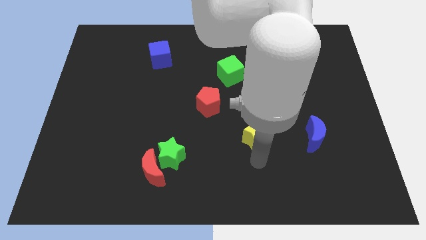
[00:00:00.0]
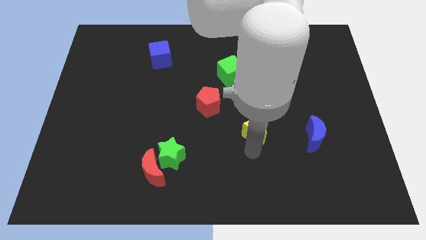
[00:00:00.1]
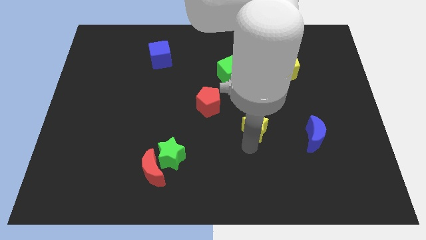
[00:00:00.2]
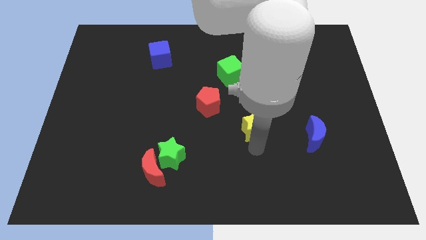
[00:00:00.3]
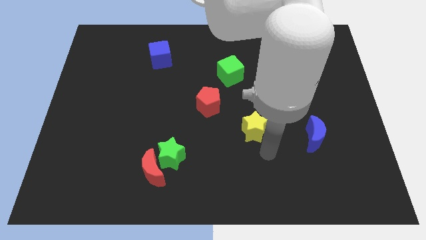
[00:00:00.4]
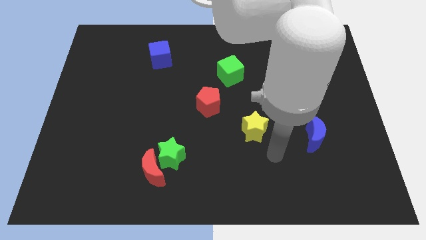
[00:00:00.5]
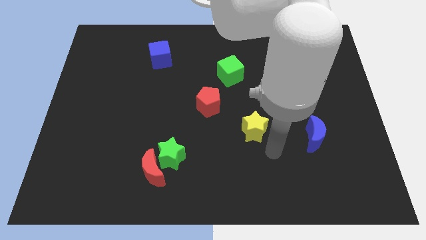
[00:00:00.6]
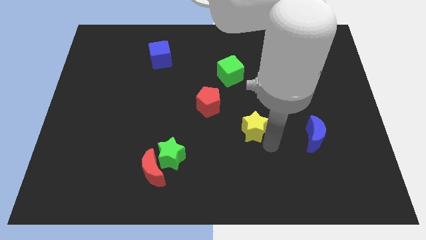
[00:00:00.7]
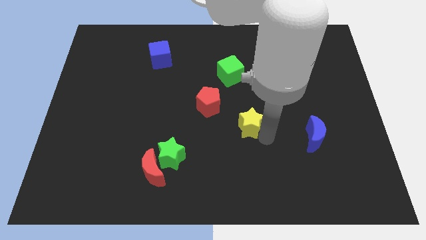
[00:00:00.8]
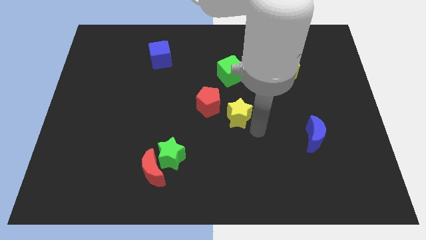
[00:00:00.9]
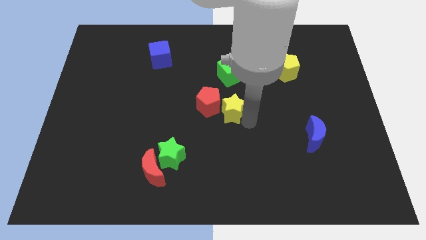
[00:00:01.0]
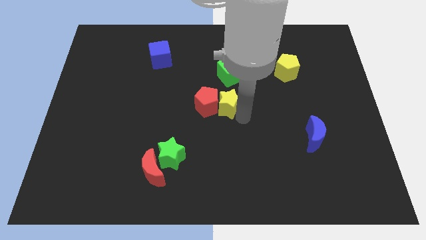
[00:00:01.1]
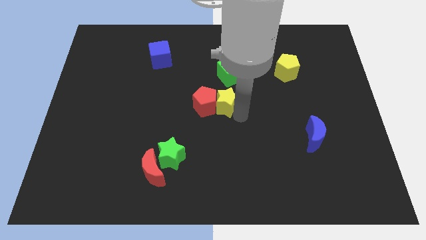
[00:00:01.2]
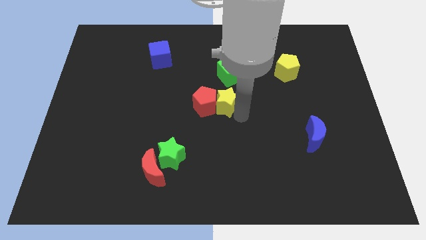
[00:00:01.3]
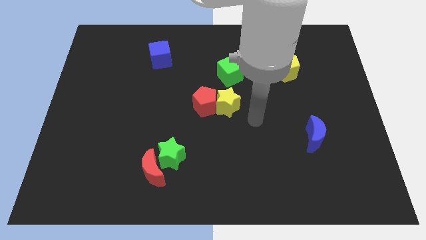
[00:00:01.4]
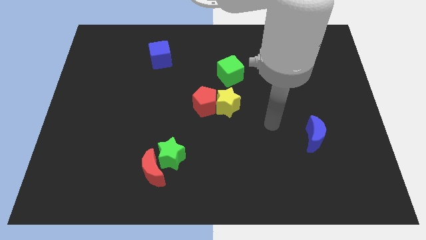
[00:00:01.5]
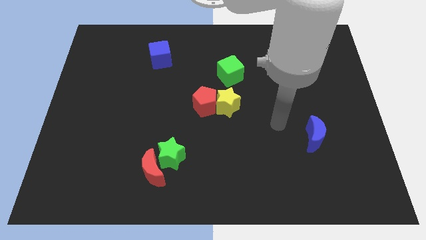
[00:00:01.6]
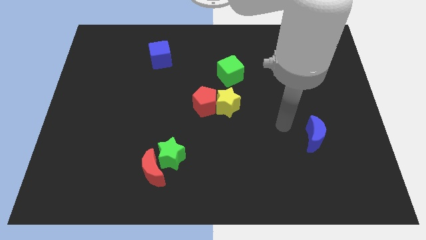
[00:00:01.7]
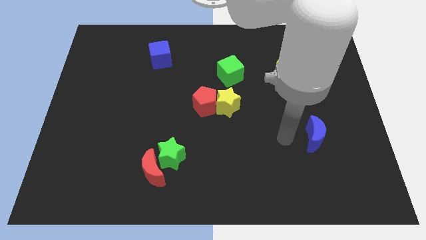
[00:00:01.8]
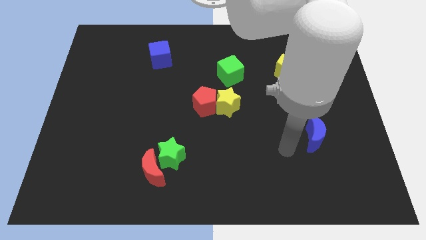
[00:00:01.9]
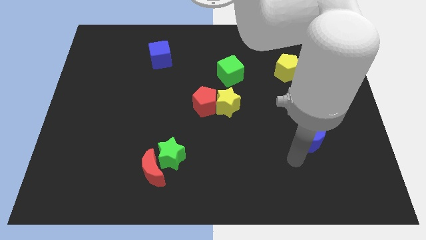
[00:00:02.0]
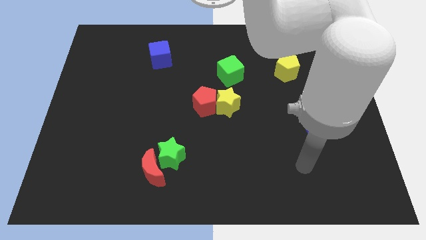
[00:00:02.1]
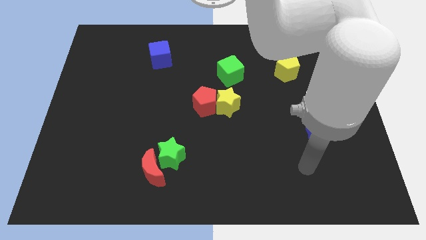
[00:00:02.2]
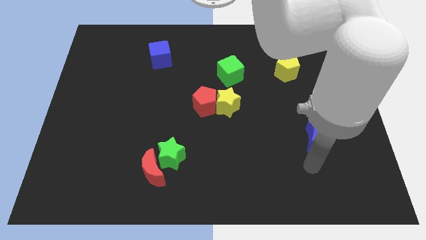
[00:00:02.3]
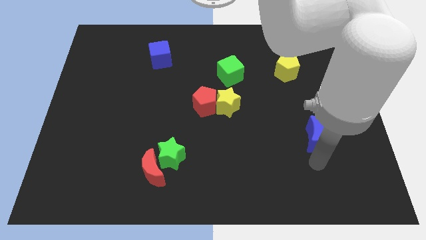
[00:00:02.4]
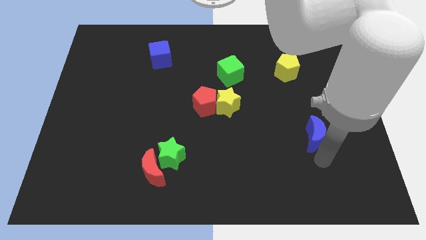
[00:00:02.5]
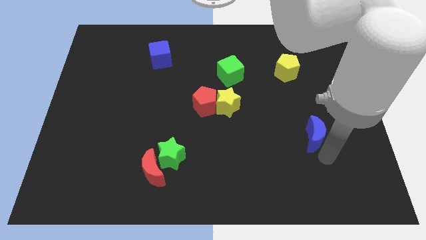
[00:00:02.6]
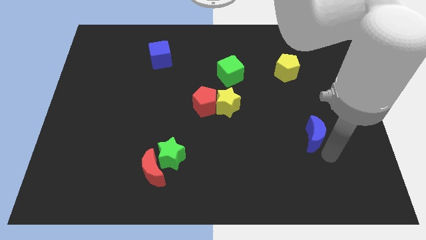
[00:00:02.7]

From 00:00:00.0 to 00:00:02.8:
move the yellow star right beside the red pentagon

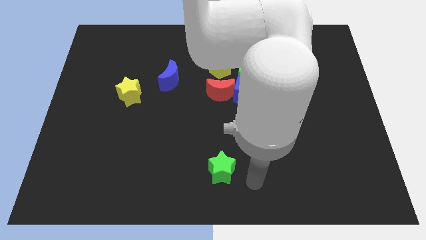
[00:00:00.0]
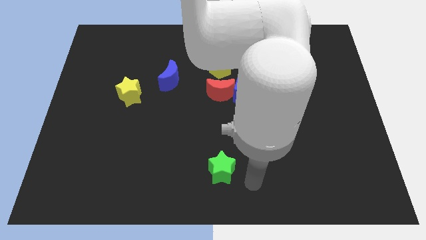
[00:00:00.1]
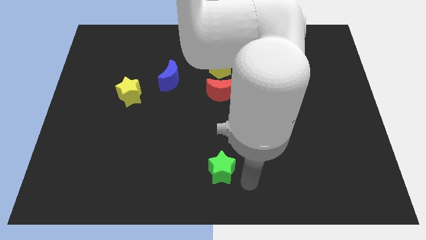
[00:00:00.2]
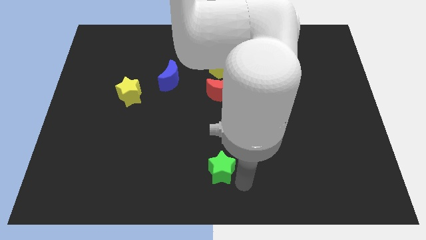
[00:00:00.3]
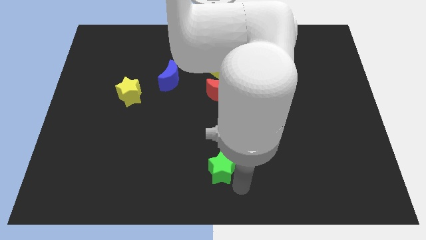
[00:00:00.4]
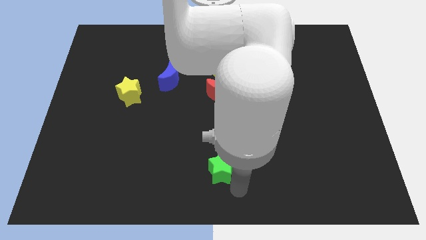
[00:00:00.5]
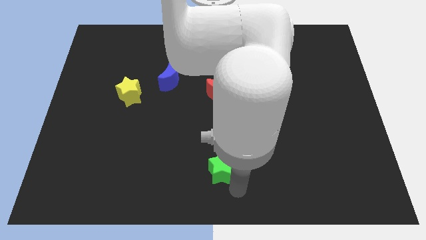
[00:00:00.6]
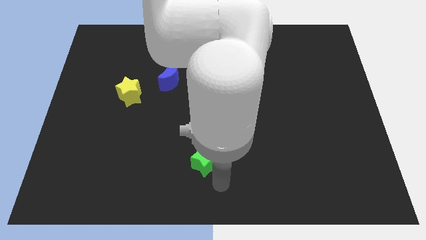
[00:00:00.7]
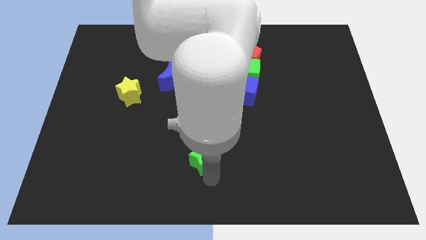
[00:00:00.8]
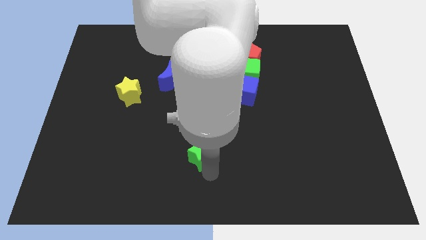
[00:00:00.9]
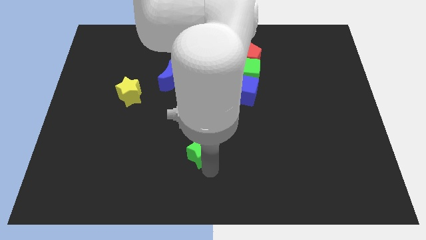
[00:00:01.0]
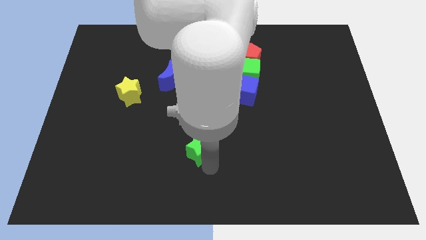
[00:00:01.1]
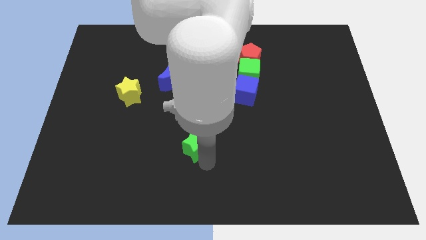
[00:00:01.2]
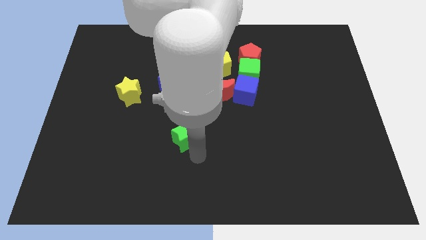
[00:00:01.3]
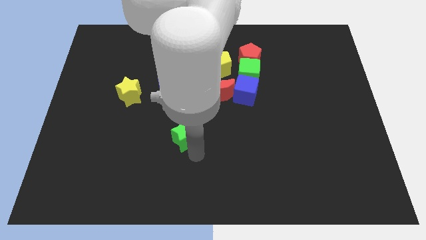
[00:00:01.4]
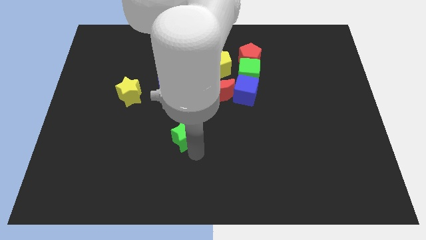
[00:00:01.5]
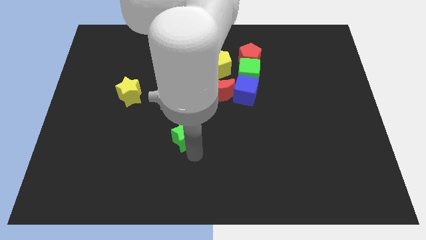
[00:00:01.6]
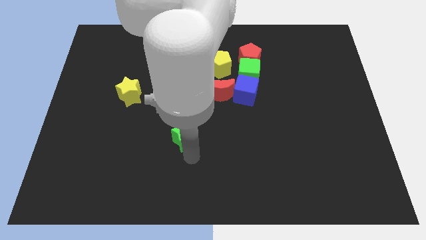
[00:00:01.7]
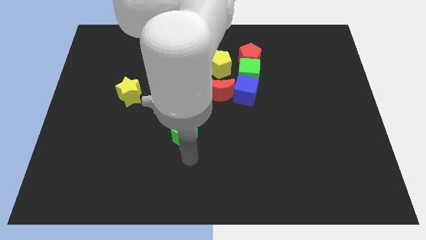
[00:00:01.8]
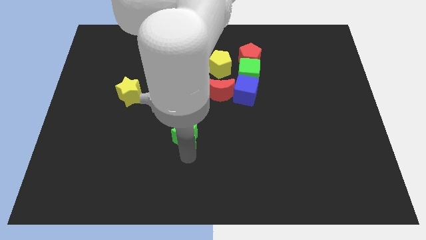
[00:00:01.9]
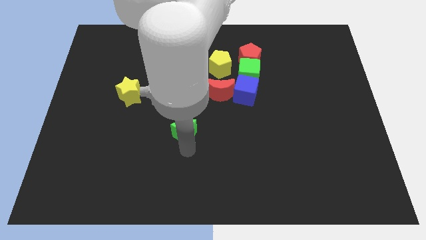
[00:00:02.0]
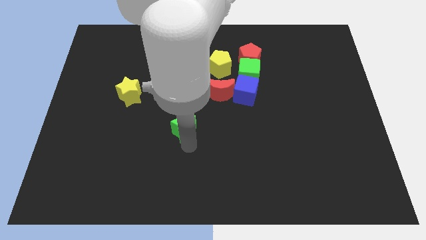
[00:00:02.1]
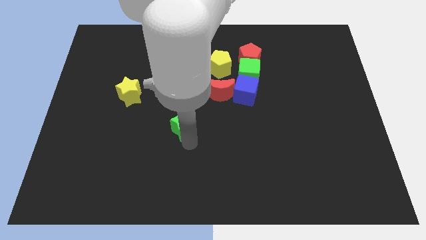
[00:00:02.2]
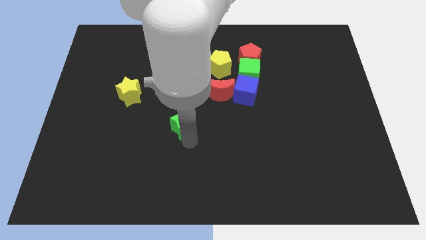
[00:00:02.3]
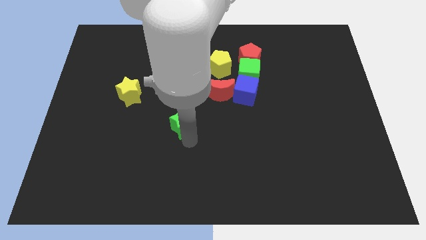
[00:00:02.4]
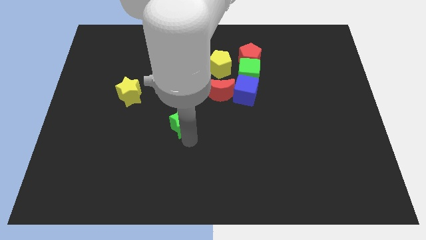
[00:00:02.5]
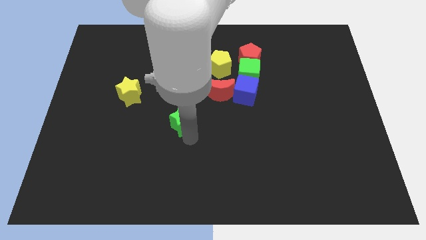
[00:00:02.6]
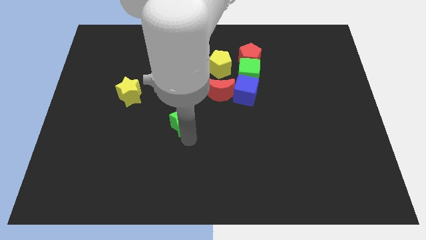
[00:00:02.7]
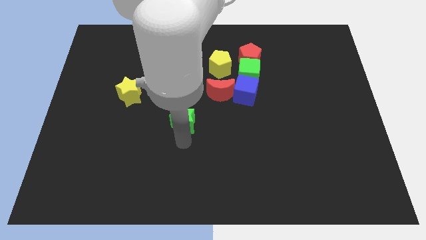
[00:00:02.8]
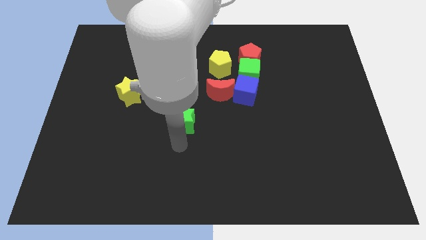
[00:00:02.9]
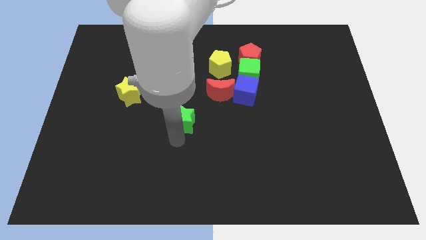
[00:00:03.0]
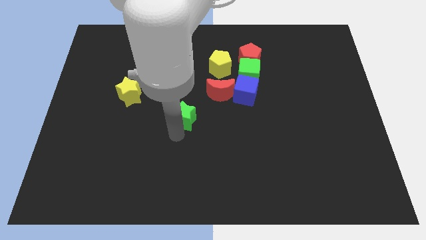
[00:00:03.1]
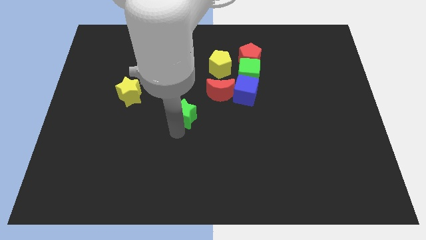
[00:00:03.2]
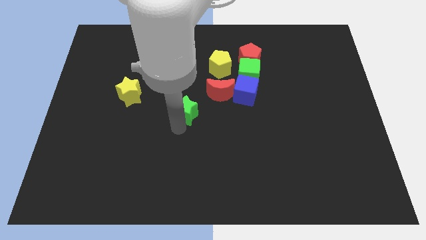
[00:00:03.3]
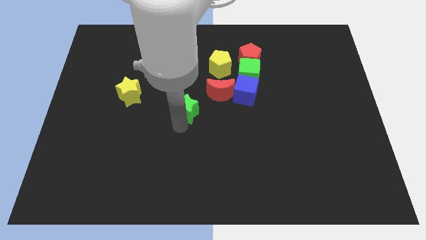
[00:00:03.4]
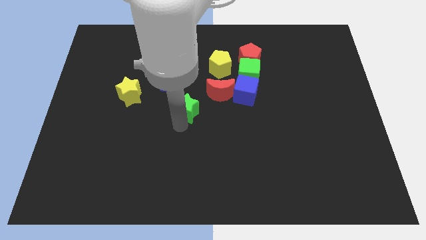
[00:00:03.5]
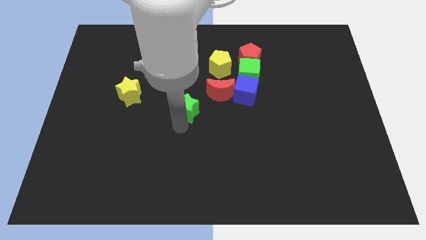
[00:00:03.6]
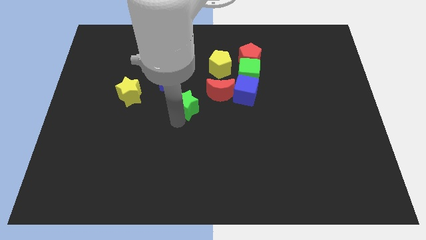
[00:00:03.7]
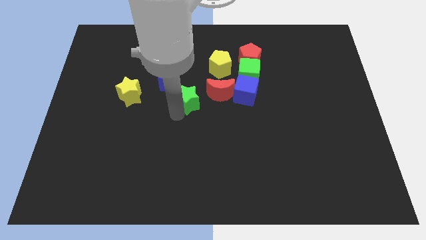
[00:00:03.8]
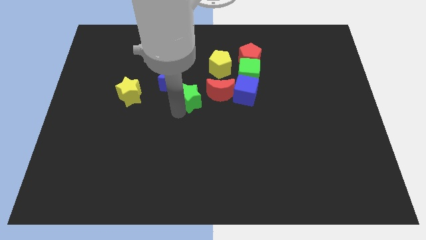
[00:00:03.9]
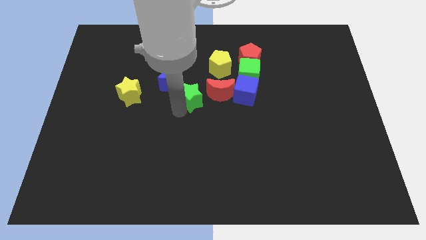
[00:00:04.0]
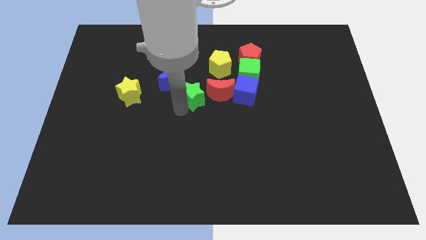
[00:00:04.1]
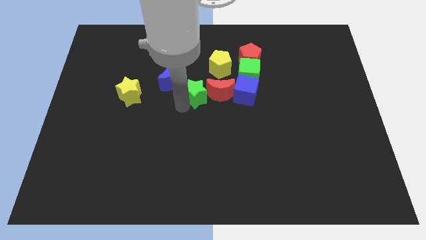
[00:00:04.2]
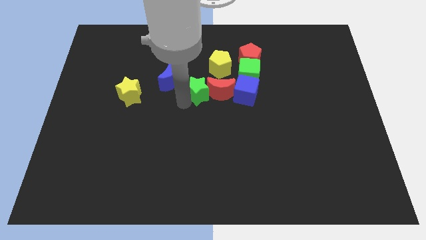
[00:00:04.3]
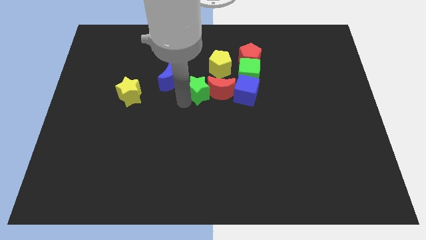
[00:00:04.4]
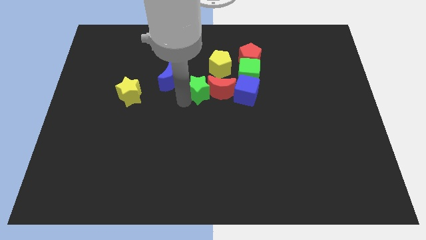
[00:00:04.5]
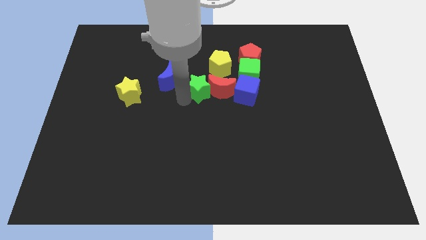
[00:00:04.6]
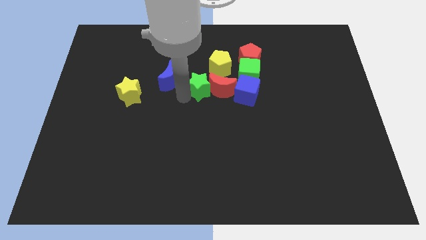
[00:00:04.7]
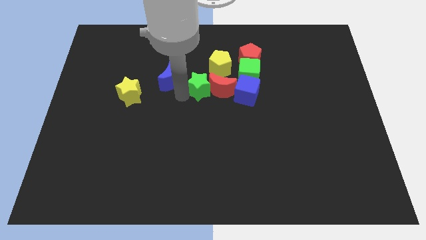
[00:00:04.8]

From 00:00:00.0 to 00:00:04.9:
push the green star into the group of blocks

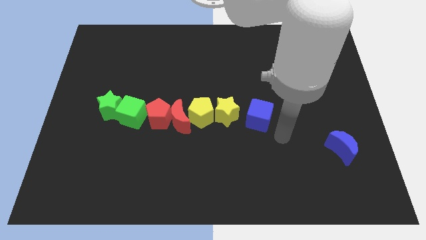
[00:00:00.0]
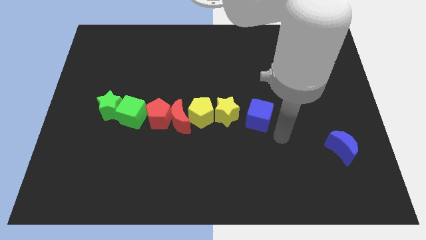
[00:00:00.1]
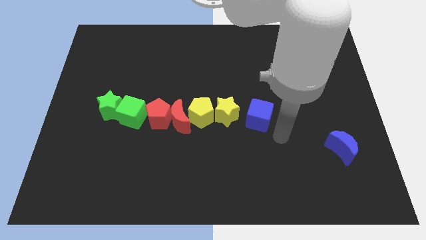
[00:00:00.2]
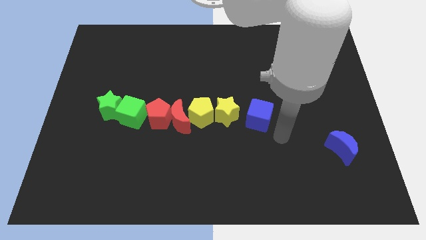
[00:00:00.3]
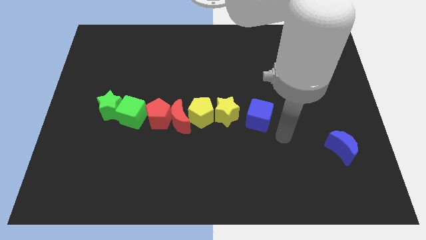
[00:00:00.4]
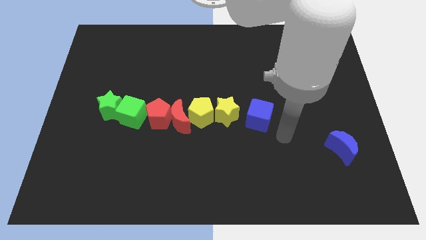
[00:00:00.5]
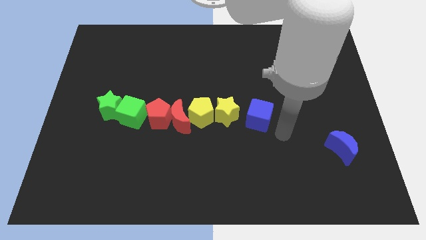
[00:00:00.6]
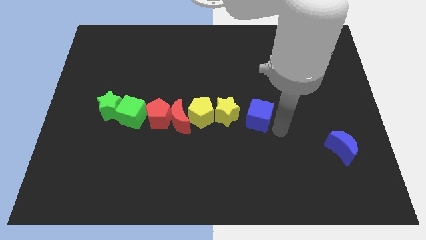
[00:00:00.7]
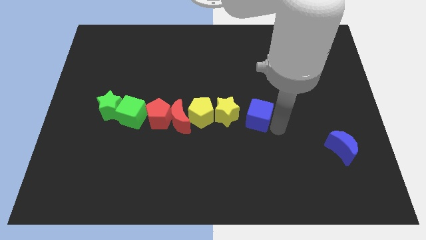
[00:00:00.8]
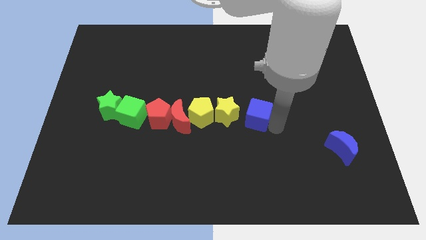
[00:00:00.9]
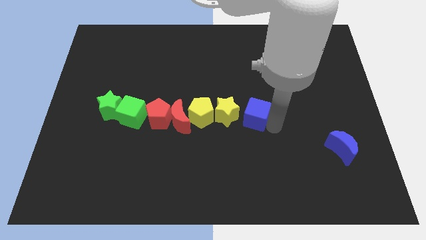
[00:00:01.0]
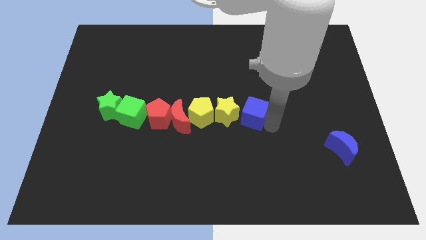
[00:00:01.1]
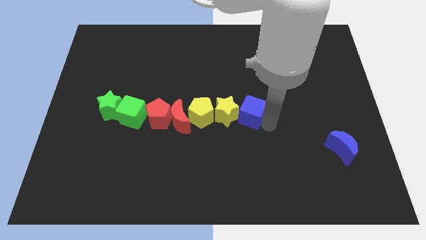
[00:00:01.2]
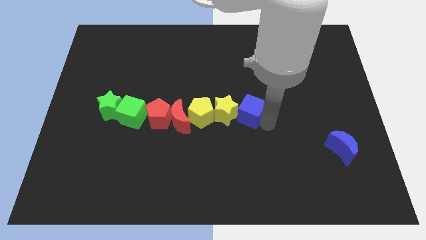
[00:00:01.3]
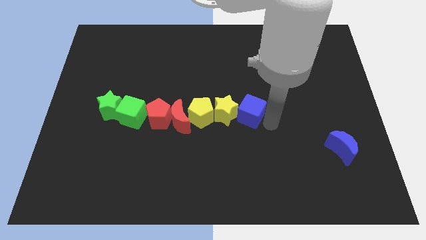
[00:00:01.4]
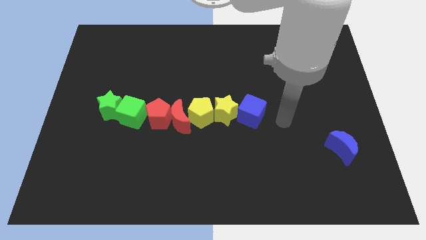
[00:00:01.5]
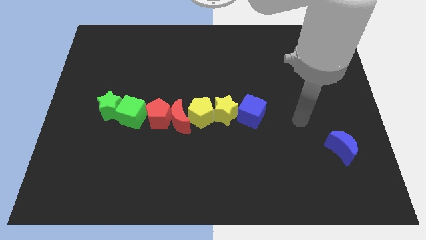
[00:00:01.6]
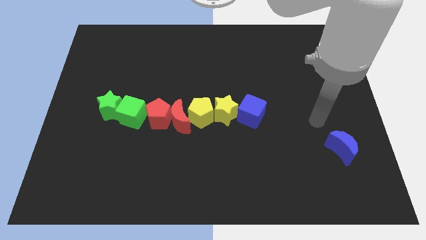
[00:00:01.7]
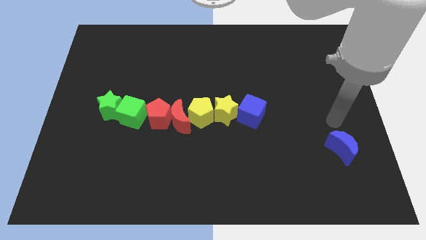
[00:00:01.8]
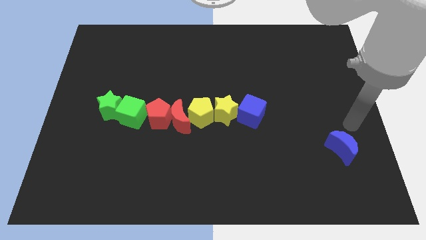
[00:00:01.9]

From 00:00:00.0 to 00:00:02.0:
place the blue cube close to yellow star
